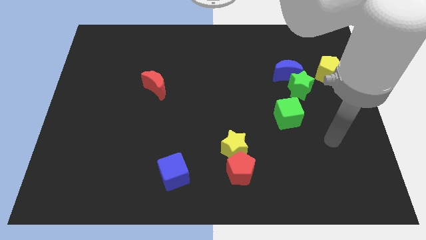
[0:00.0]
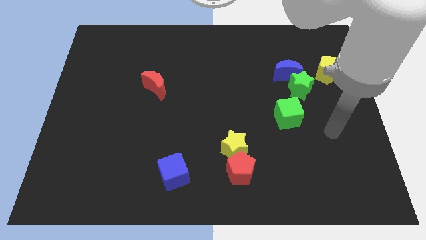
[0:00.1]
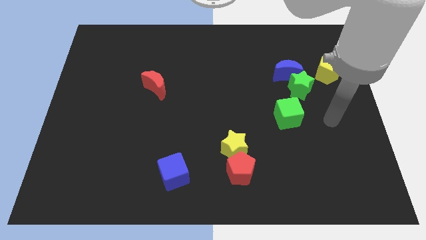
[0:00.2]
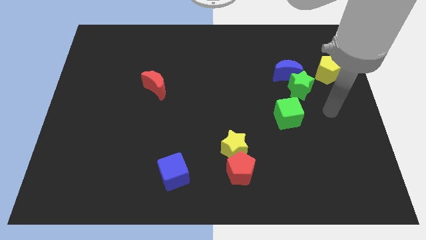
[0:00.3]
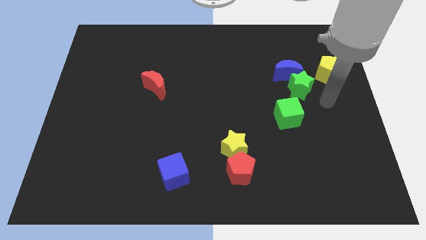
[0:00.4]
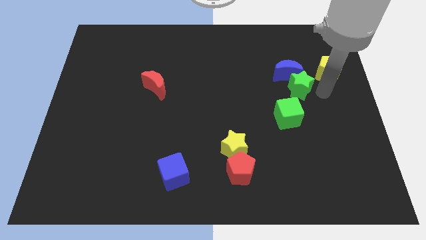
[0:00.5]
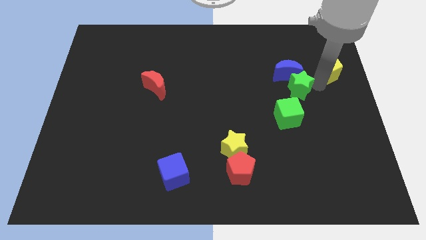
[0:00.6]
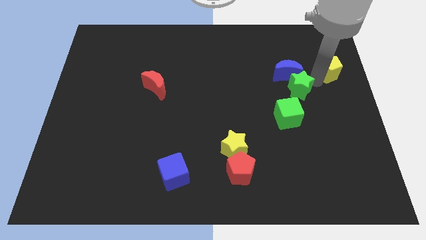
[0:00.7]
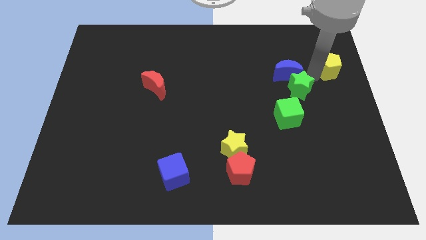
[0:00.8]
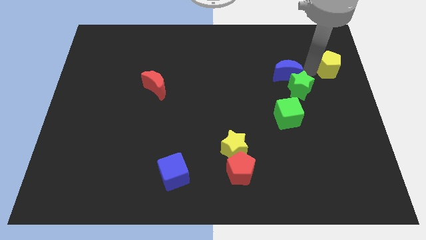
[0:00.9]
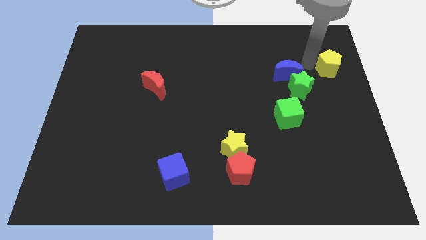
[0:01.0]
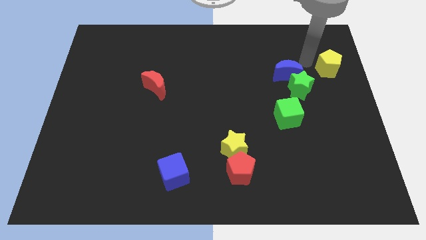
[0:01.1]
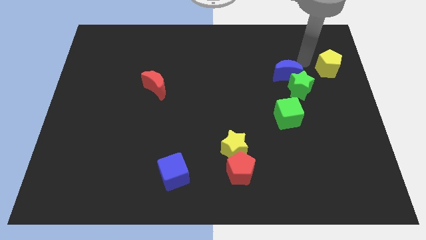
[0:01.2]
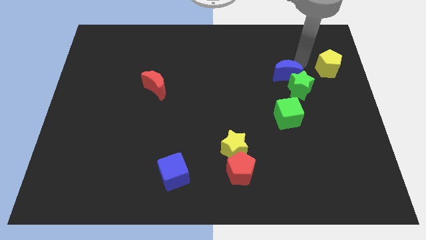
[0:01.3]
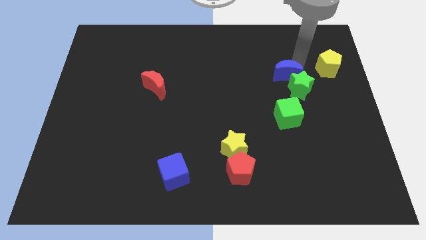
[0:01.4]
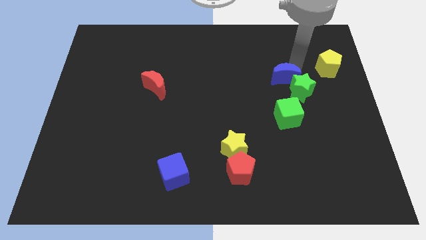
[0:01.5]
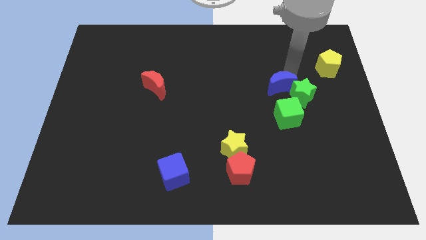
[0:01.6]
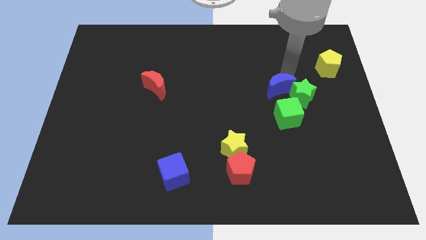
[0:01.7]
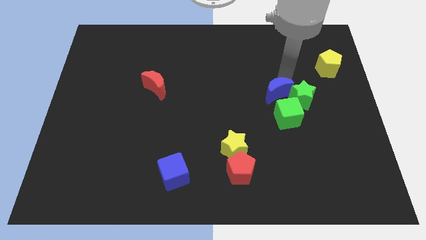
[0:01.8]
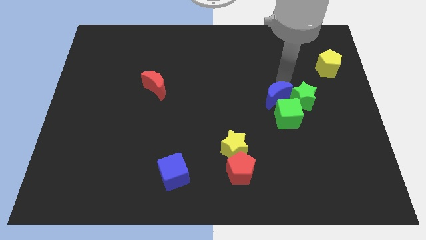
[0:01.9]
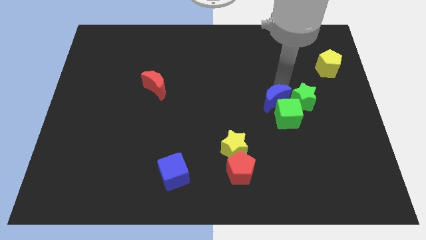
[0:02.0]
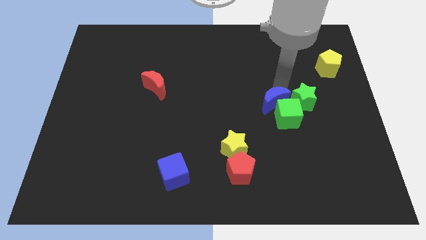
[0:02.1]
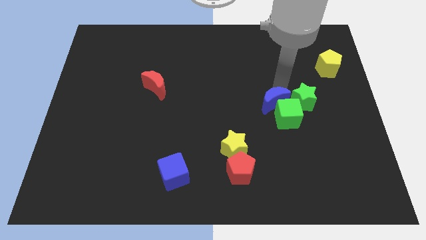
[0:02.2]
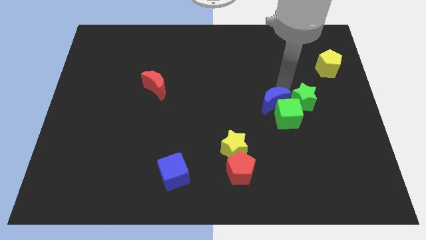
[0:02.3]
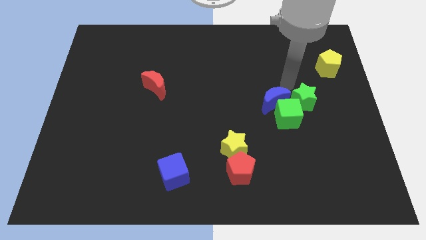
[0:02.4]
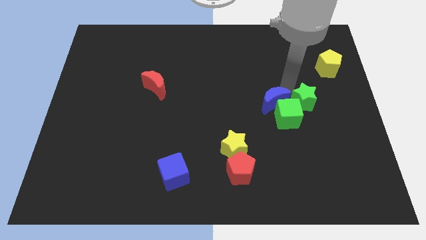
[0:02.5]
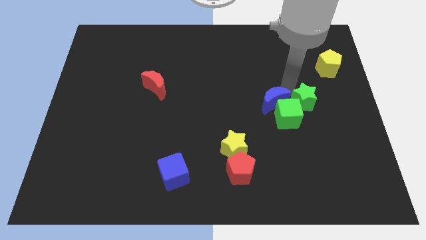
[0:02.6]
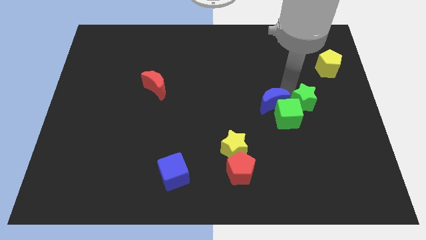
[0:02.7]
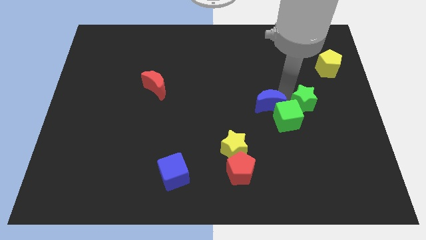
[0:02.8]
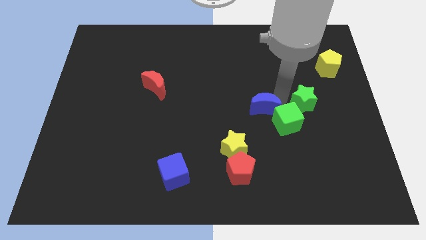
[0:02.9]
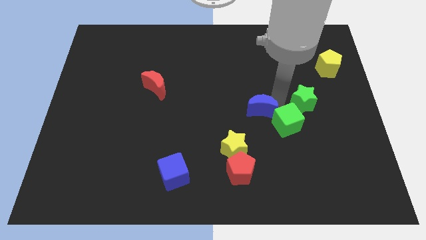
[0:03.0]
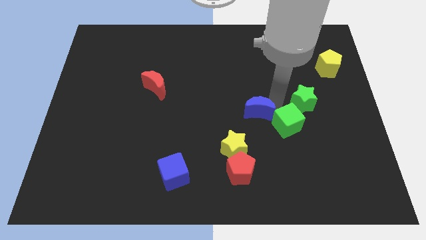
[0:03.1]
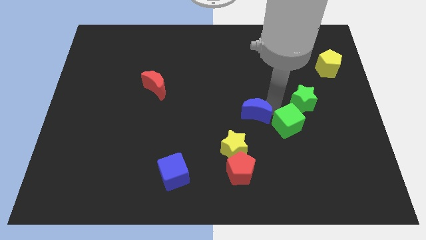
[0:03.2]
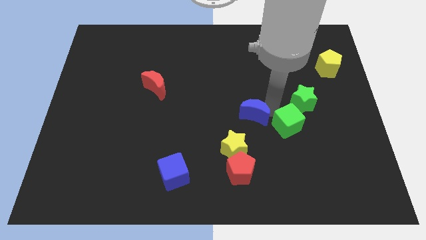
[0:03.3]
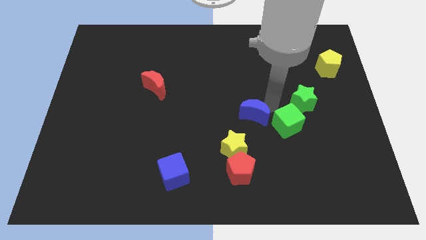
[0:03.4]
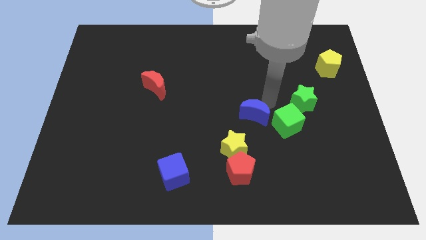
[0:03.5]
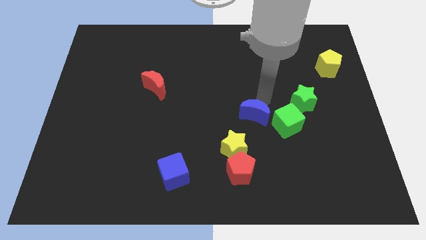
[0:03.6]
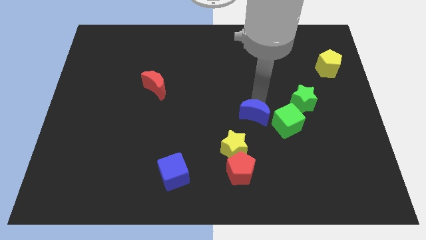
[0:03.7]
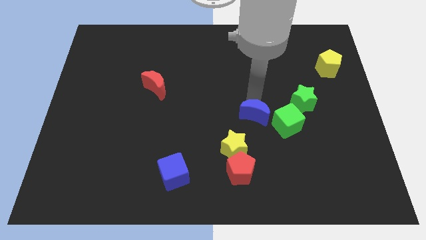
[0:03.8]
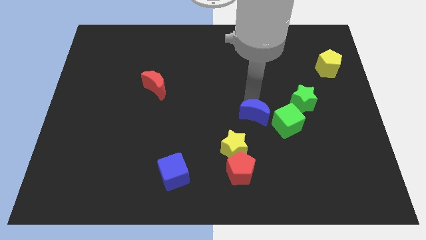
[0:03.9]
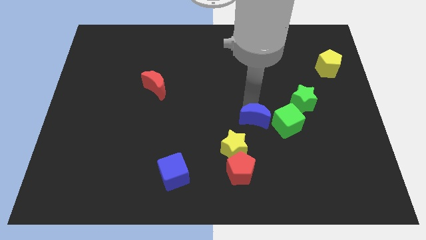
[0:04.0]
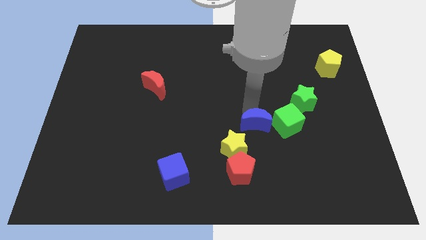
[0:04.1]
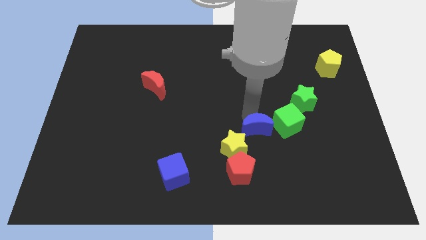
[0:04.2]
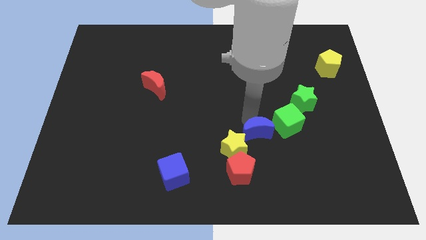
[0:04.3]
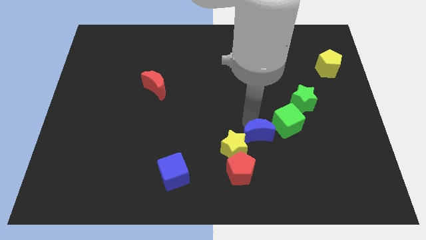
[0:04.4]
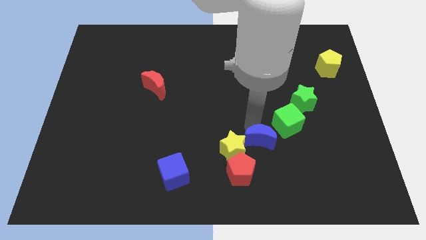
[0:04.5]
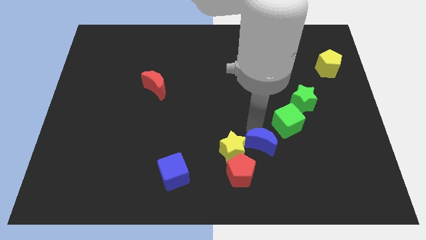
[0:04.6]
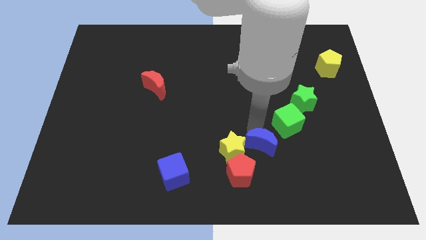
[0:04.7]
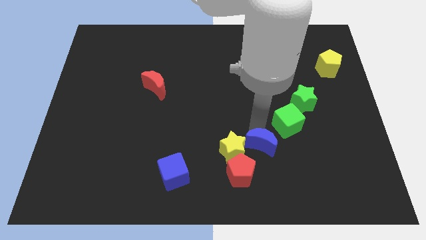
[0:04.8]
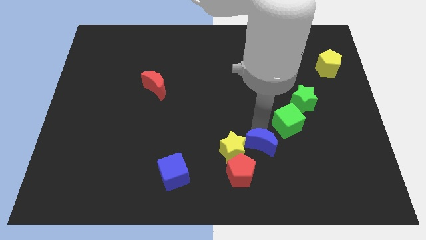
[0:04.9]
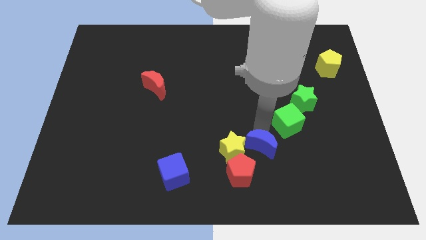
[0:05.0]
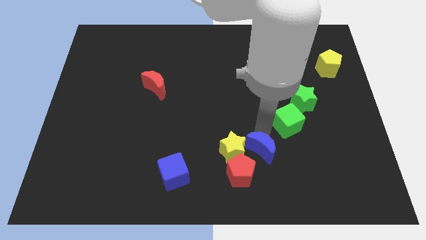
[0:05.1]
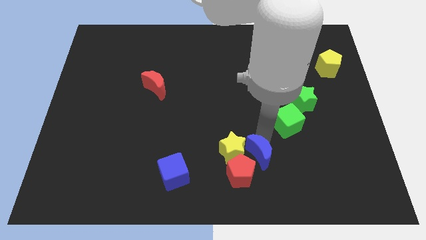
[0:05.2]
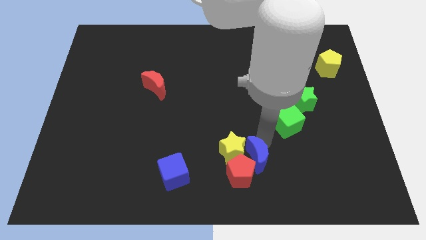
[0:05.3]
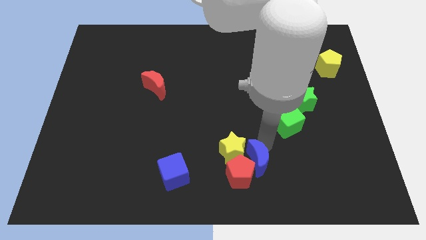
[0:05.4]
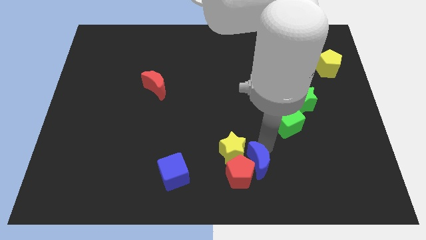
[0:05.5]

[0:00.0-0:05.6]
move the blue moon towards the red pentagon

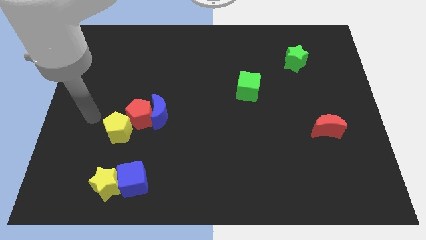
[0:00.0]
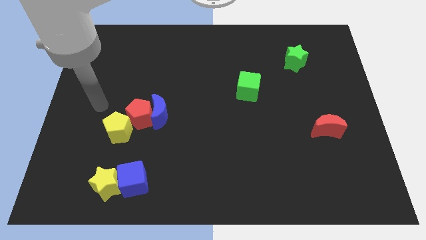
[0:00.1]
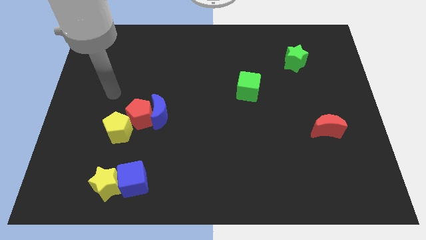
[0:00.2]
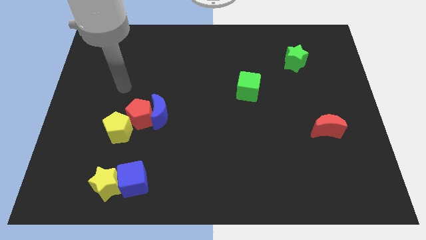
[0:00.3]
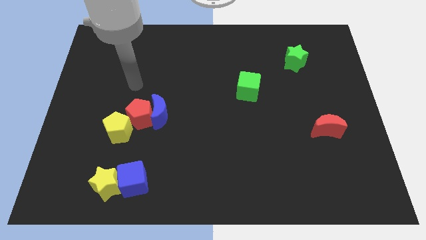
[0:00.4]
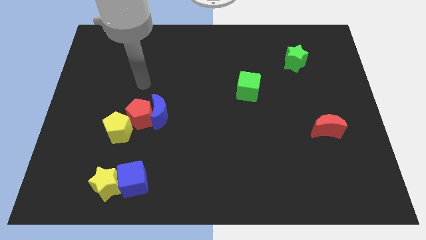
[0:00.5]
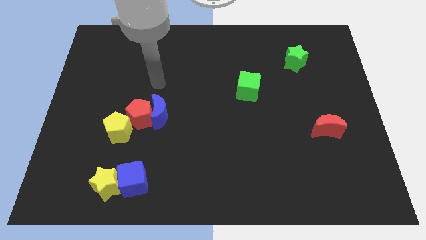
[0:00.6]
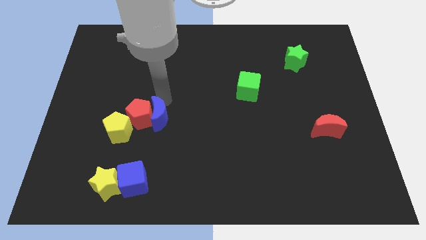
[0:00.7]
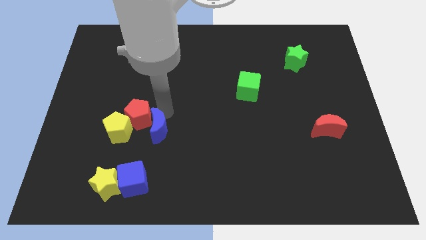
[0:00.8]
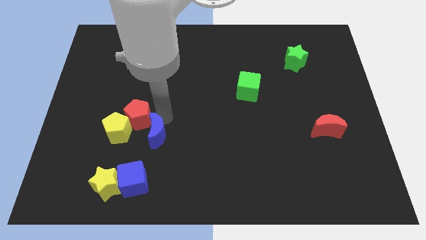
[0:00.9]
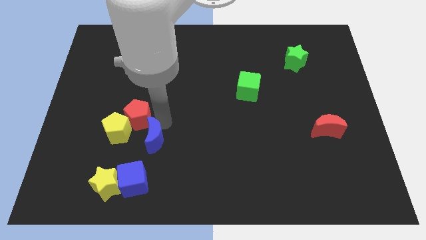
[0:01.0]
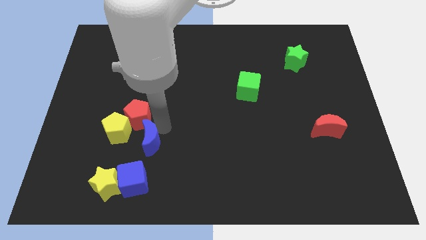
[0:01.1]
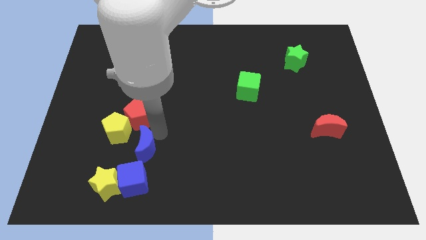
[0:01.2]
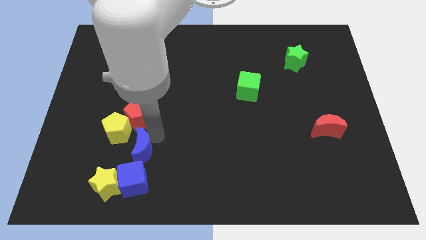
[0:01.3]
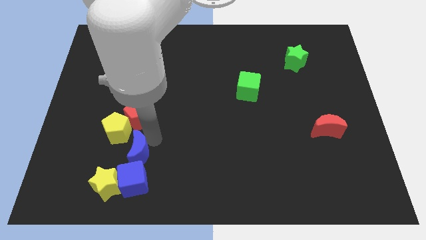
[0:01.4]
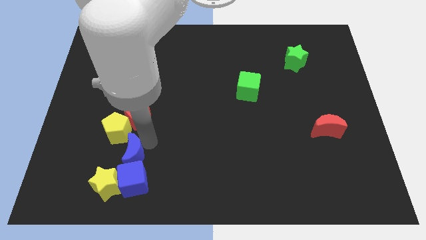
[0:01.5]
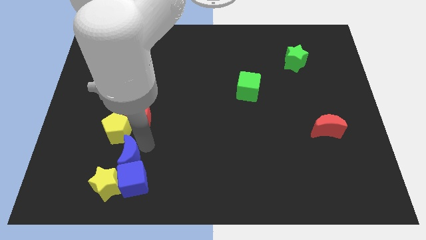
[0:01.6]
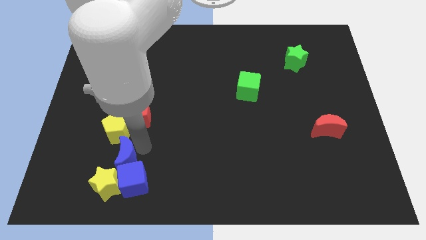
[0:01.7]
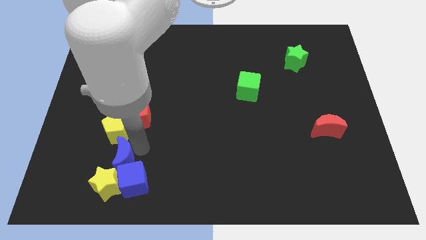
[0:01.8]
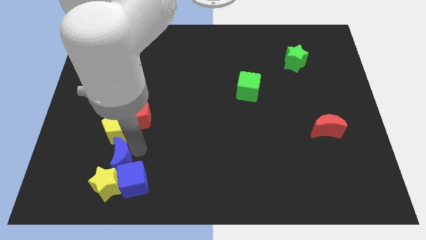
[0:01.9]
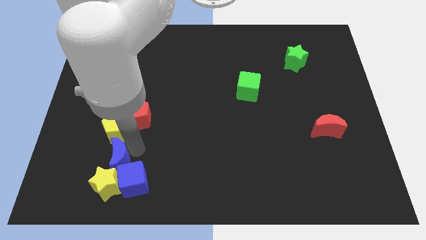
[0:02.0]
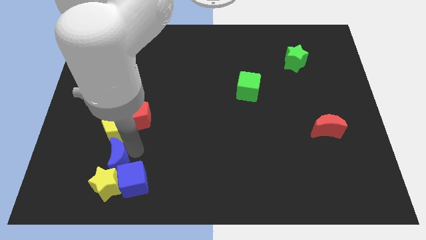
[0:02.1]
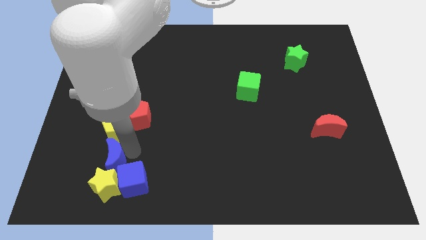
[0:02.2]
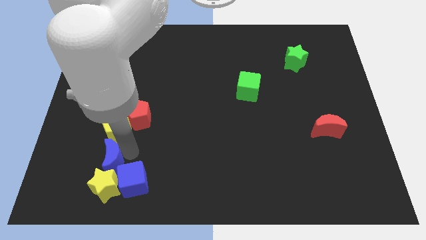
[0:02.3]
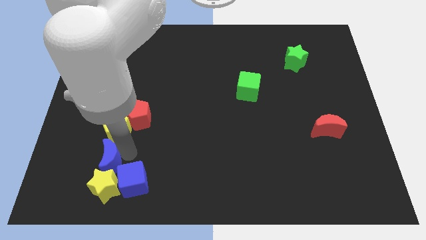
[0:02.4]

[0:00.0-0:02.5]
push the blue moon next to the yellow star
